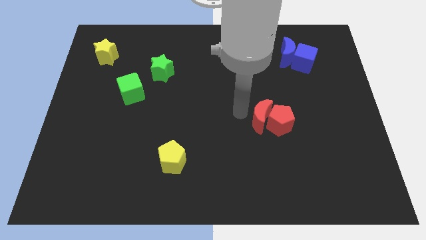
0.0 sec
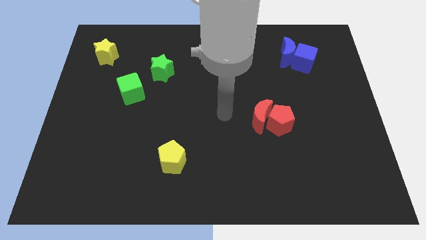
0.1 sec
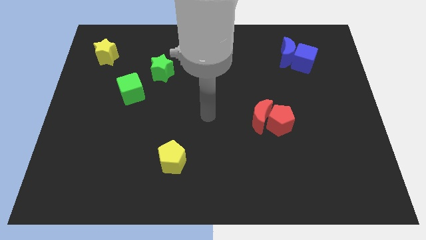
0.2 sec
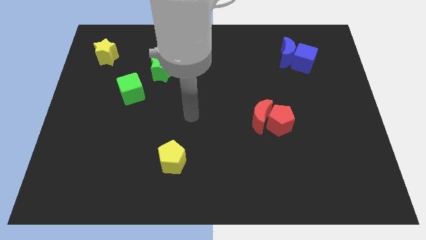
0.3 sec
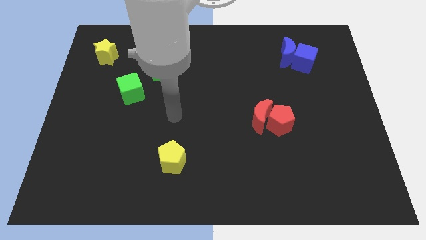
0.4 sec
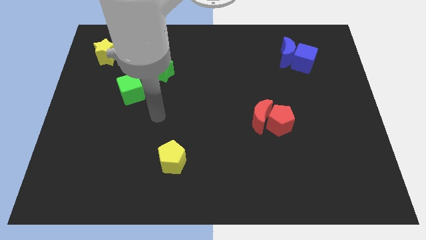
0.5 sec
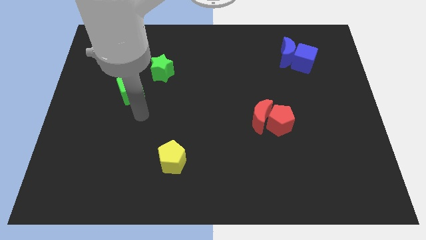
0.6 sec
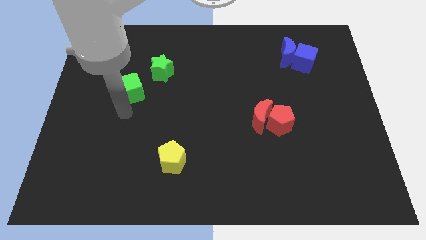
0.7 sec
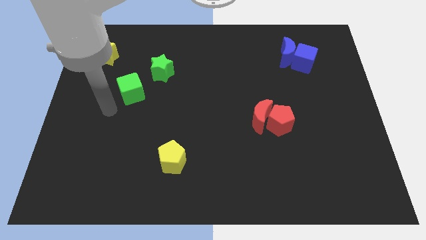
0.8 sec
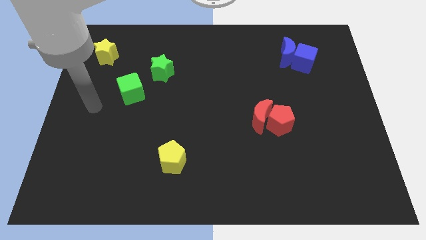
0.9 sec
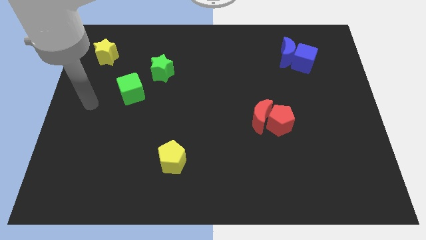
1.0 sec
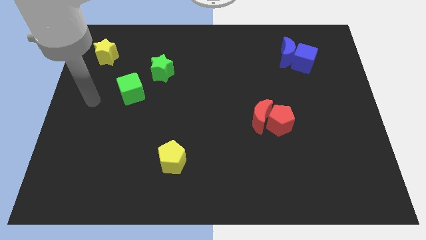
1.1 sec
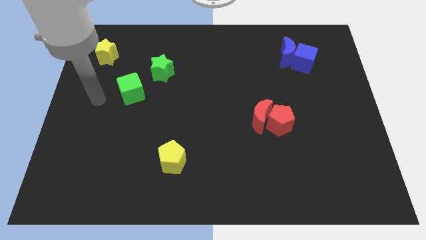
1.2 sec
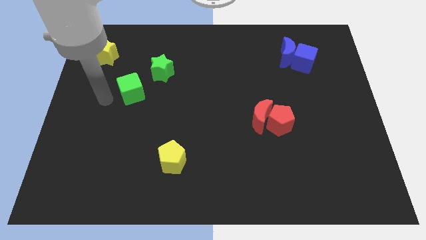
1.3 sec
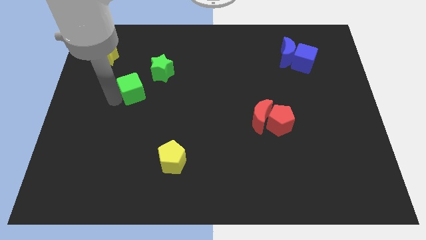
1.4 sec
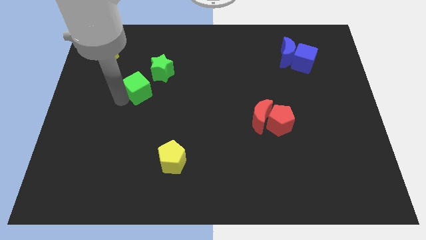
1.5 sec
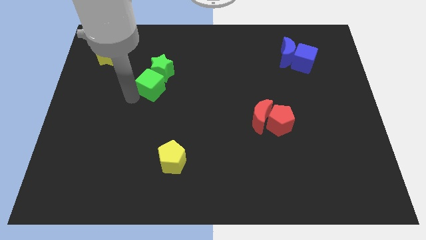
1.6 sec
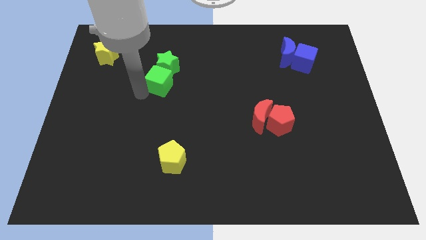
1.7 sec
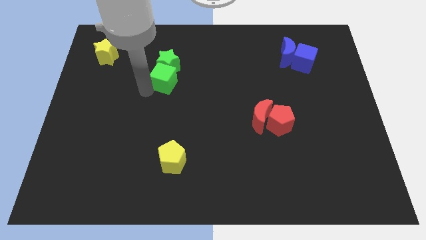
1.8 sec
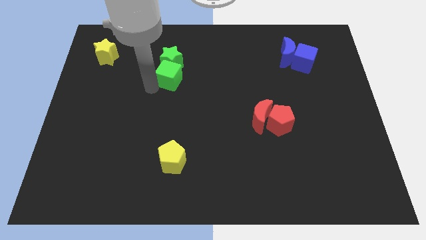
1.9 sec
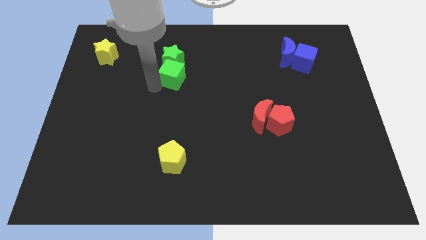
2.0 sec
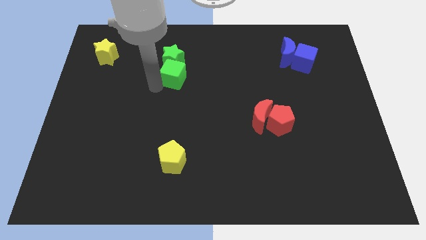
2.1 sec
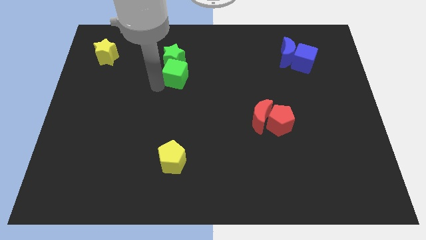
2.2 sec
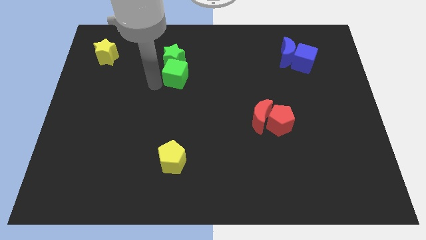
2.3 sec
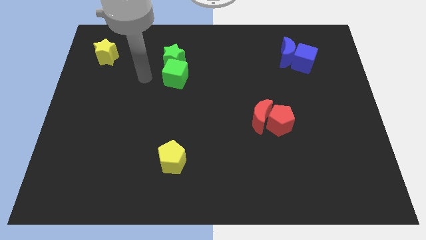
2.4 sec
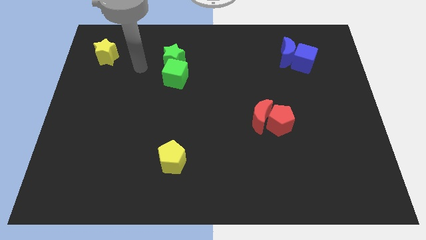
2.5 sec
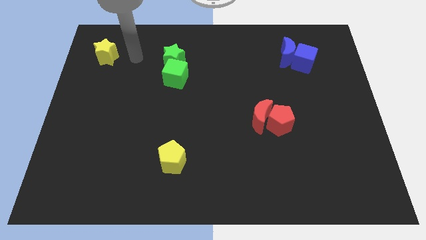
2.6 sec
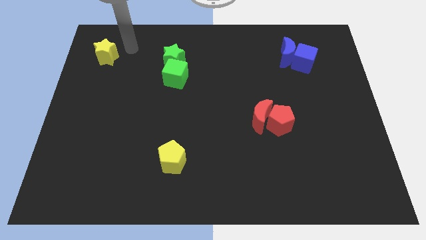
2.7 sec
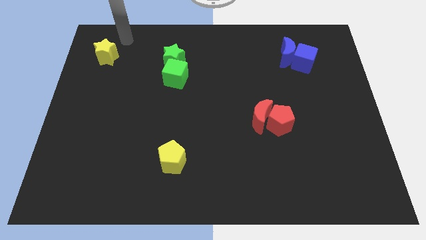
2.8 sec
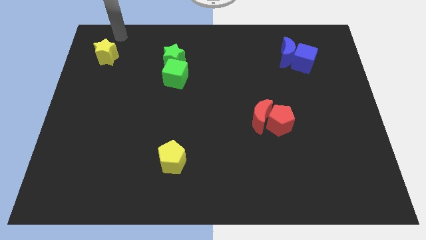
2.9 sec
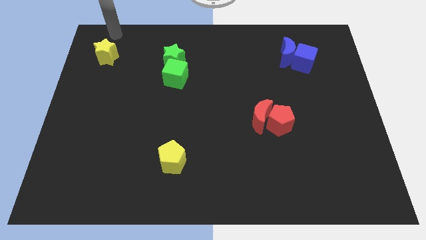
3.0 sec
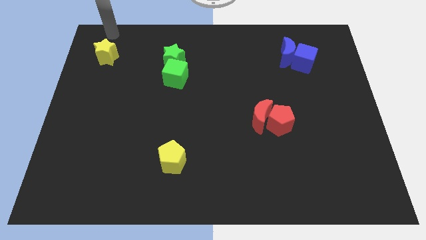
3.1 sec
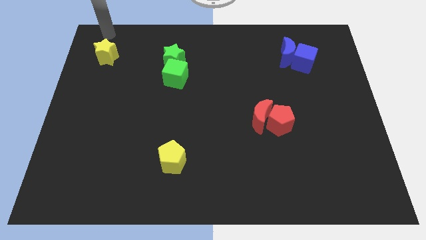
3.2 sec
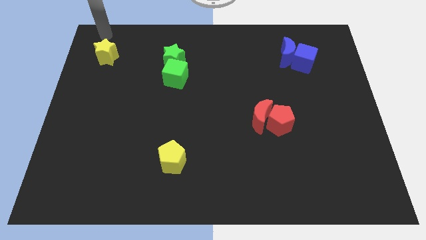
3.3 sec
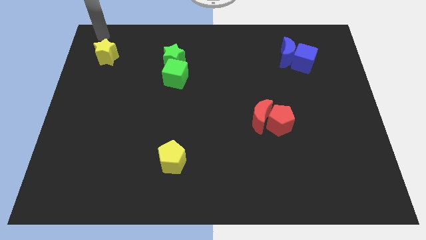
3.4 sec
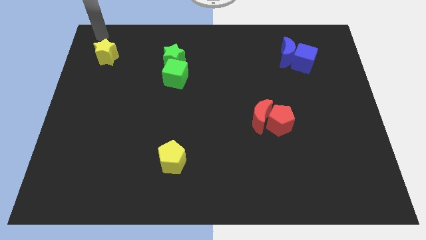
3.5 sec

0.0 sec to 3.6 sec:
push the green cube and green star towards upward

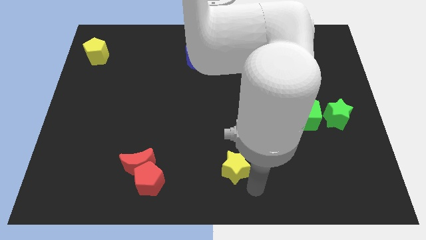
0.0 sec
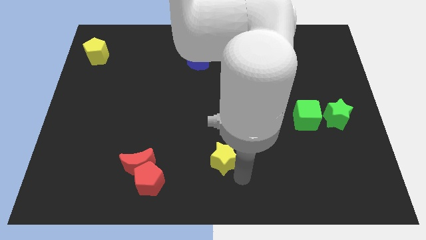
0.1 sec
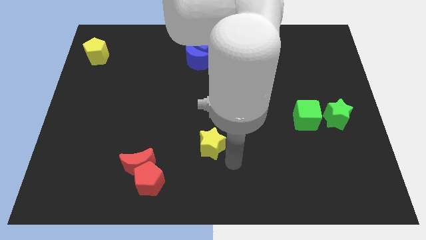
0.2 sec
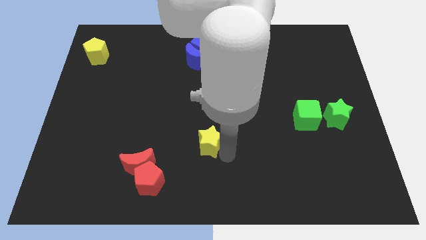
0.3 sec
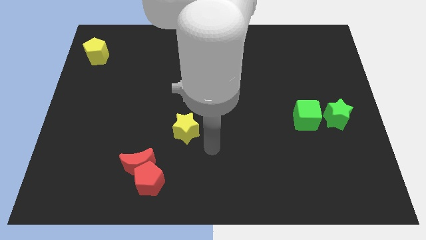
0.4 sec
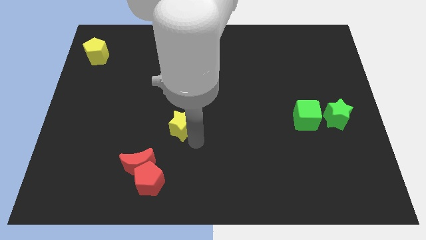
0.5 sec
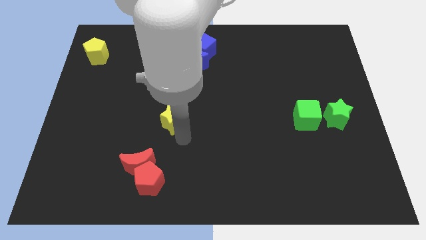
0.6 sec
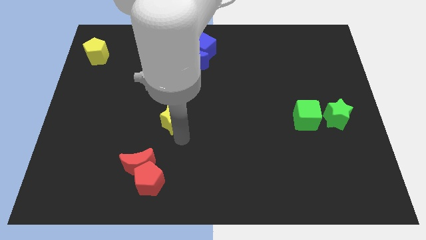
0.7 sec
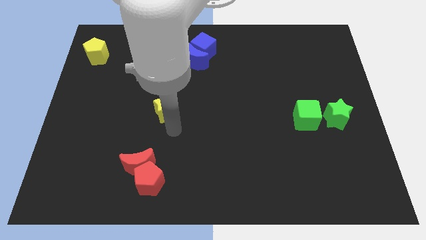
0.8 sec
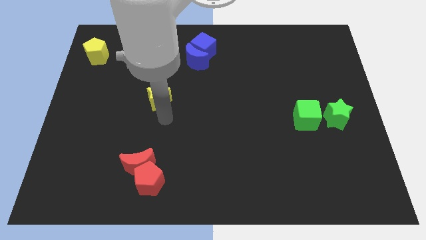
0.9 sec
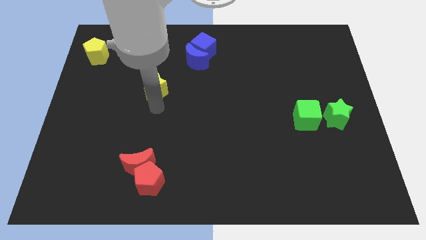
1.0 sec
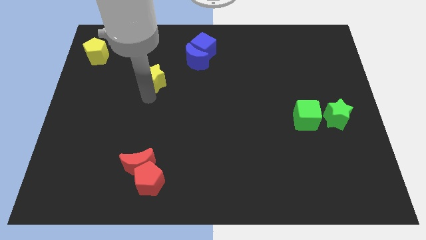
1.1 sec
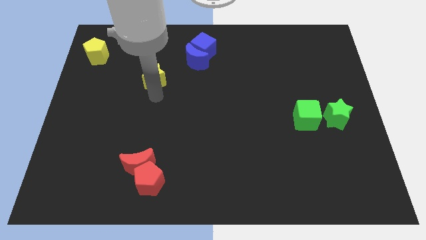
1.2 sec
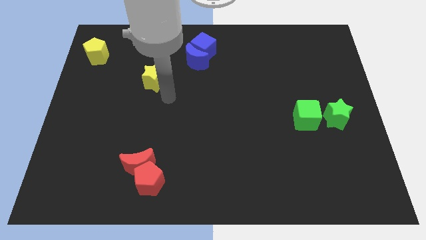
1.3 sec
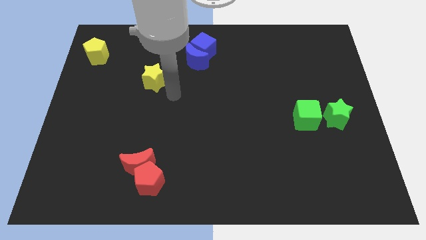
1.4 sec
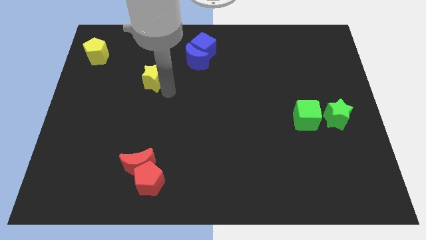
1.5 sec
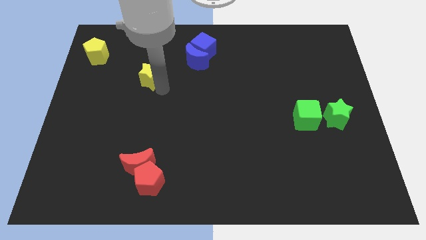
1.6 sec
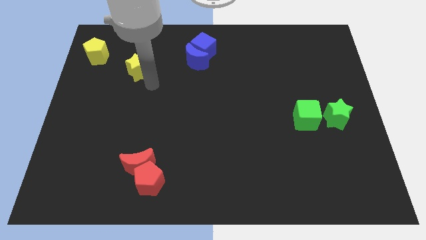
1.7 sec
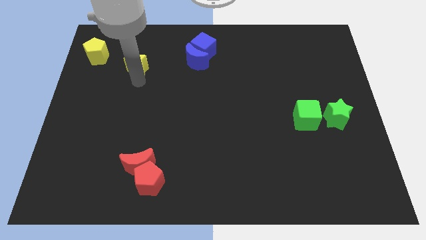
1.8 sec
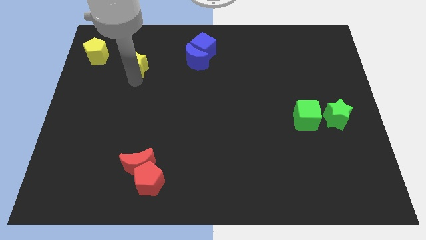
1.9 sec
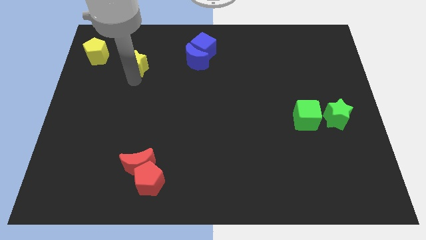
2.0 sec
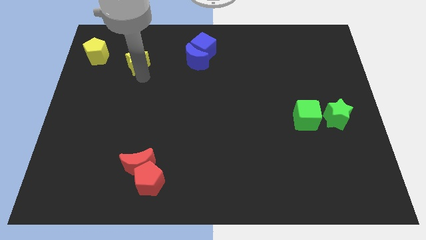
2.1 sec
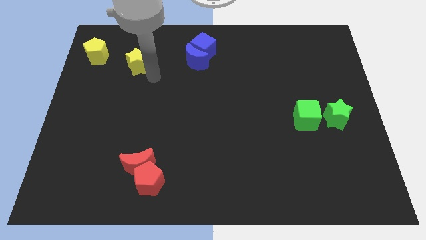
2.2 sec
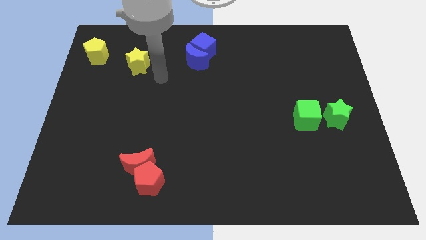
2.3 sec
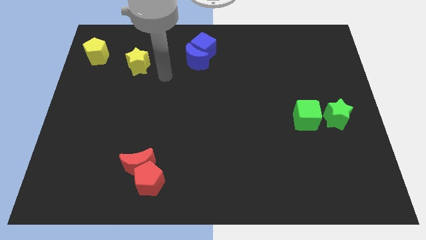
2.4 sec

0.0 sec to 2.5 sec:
place the yellow star in between the yellow pentagon and the blue moon

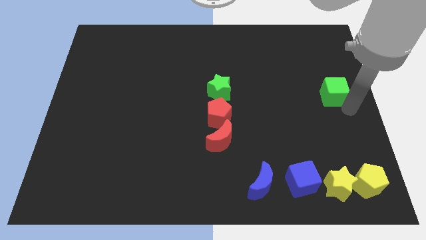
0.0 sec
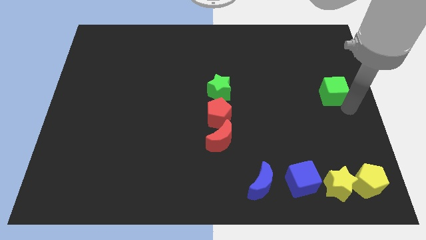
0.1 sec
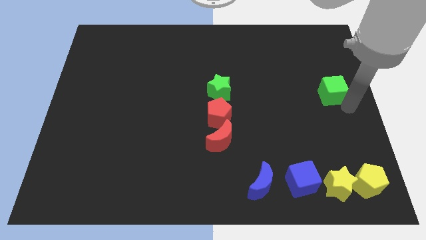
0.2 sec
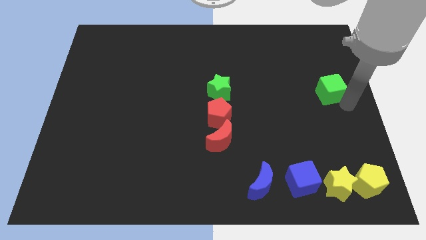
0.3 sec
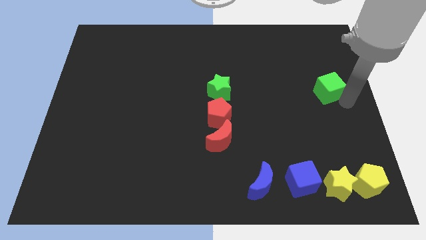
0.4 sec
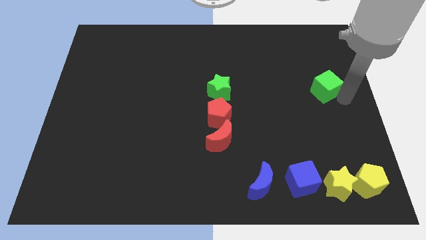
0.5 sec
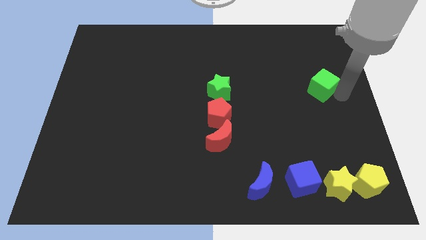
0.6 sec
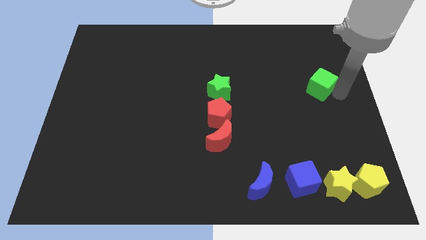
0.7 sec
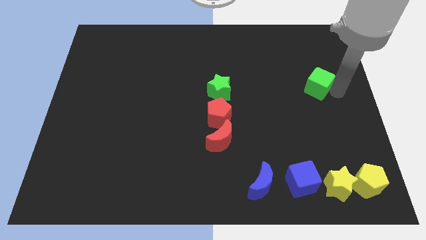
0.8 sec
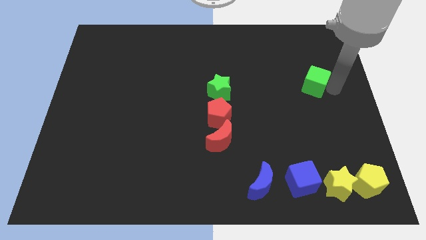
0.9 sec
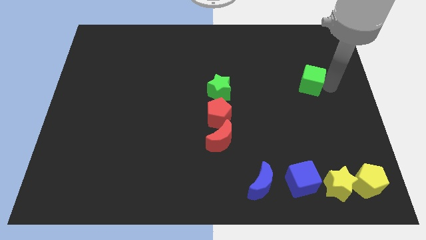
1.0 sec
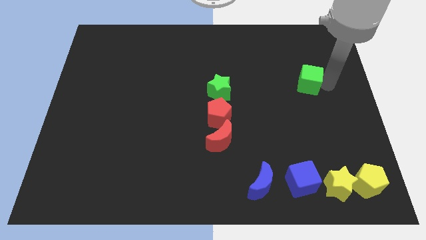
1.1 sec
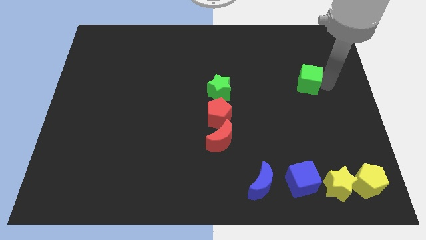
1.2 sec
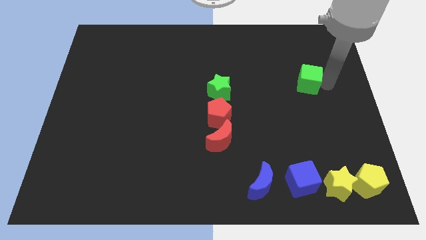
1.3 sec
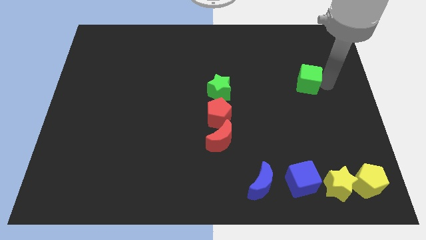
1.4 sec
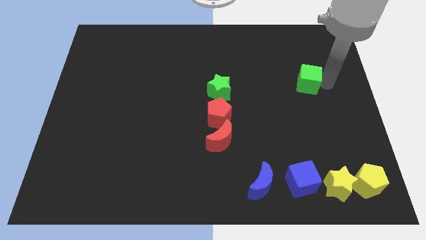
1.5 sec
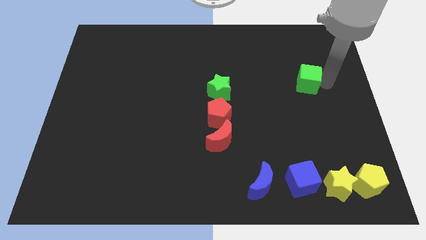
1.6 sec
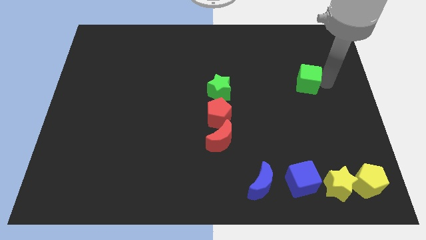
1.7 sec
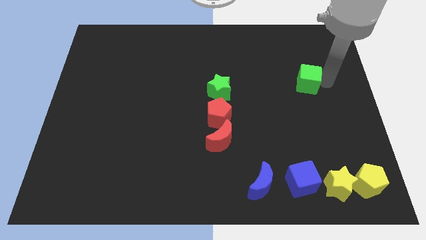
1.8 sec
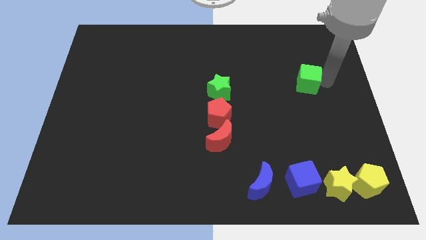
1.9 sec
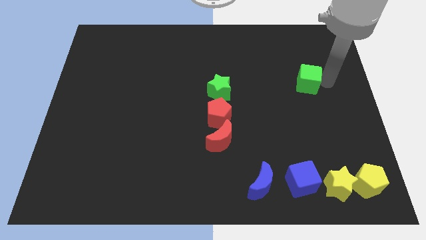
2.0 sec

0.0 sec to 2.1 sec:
push the green cube slightly left

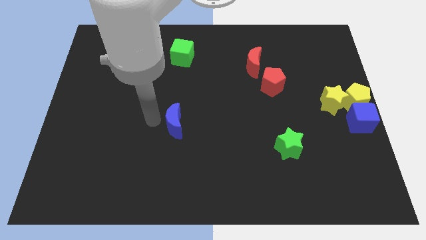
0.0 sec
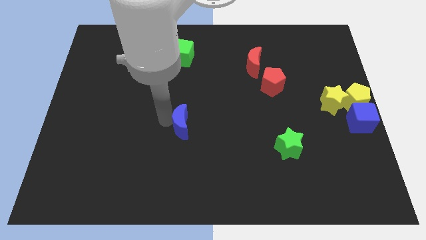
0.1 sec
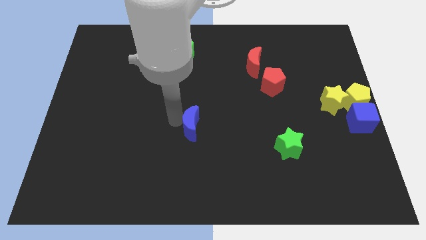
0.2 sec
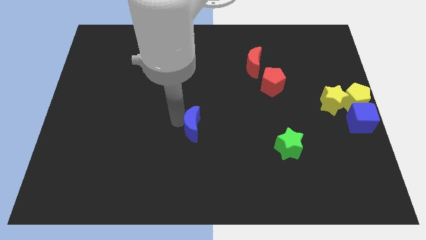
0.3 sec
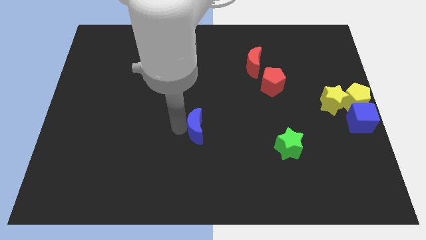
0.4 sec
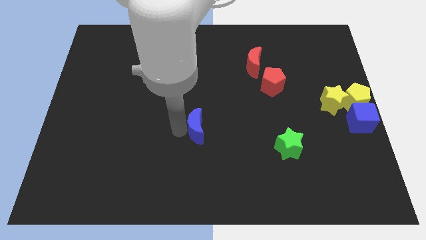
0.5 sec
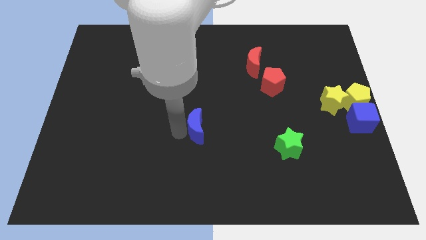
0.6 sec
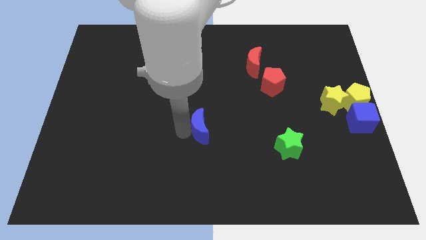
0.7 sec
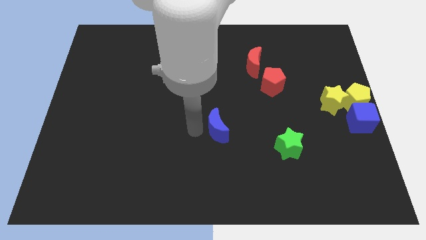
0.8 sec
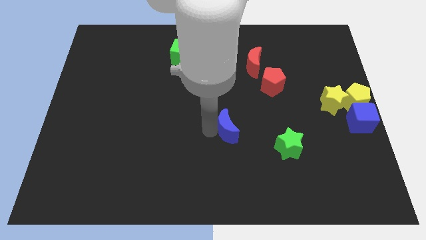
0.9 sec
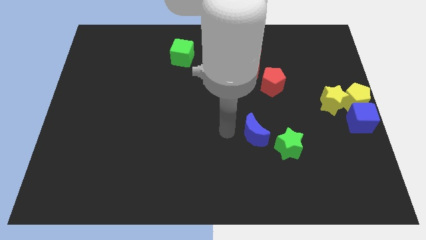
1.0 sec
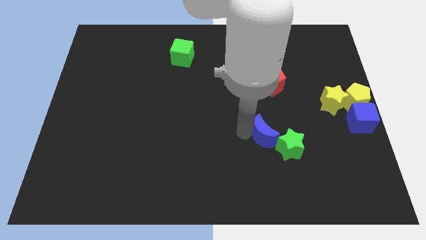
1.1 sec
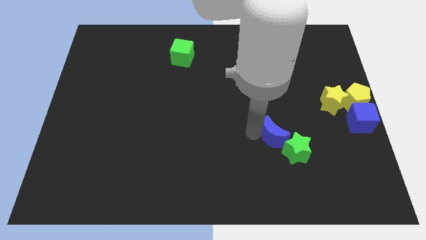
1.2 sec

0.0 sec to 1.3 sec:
slide the blue moon diagonally bottom right to the green cube
